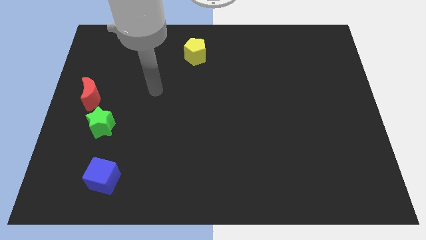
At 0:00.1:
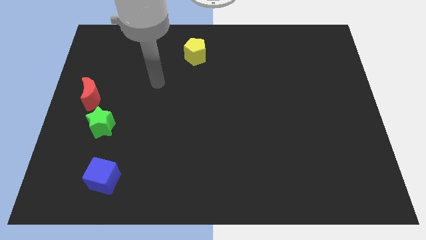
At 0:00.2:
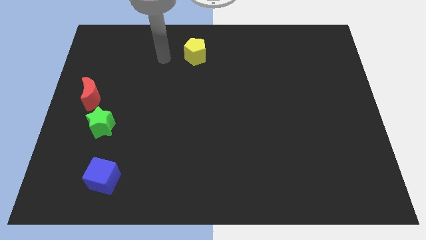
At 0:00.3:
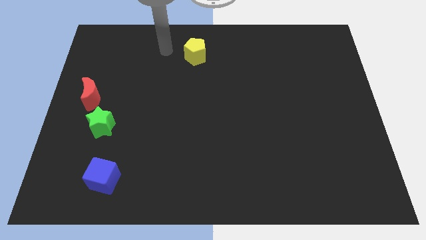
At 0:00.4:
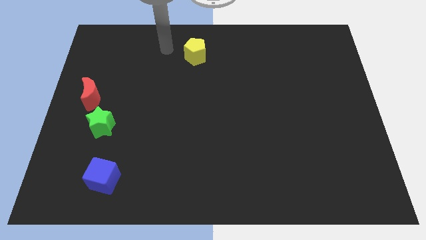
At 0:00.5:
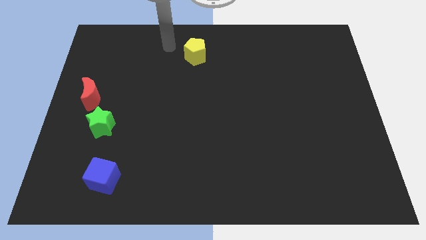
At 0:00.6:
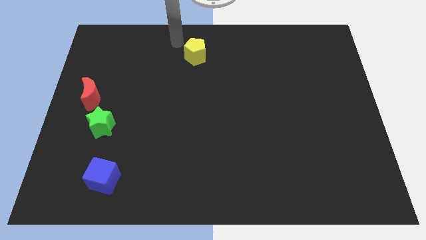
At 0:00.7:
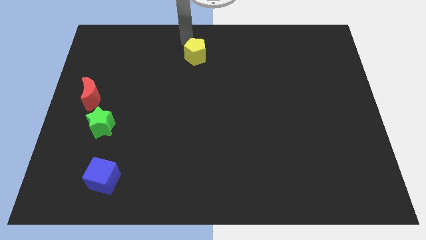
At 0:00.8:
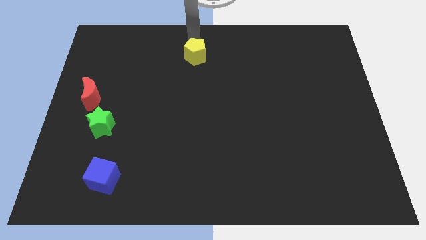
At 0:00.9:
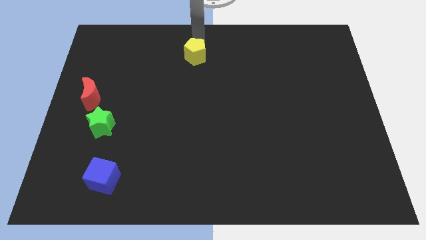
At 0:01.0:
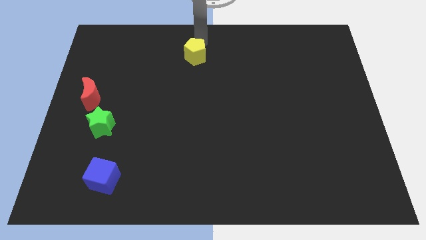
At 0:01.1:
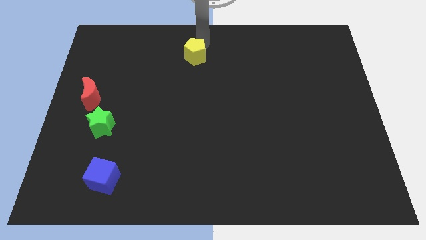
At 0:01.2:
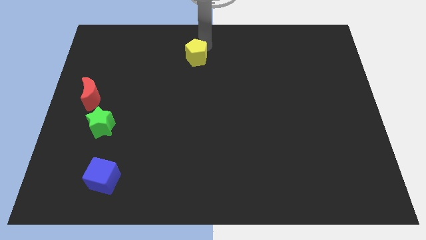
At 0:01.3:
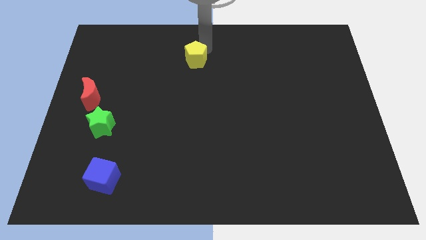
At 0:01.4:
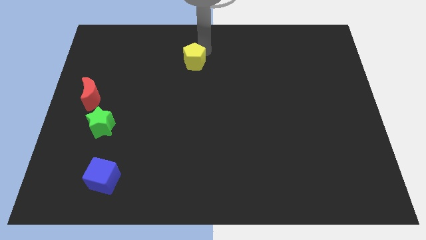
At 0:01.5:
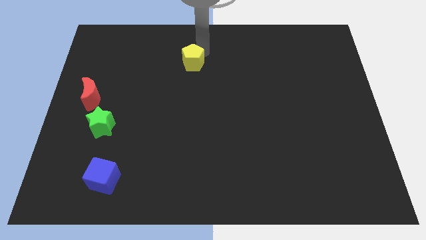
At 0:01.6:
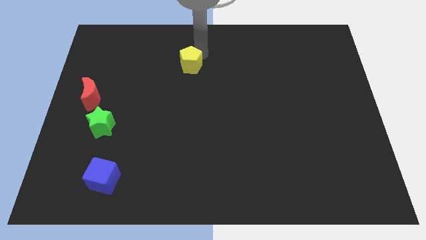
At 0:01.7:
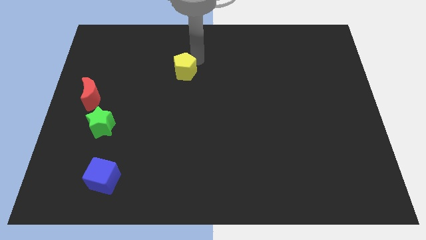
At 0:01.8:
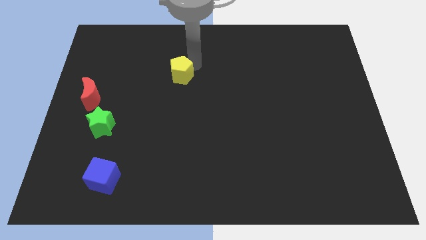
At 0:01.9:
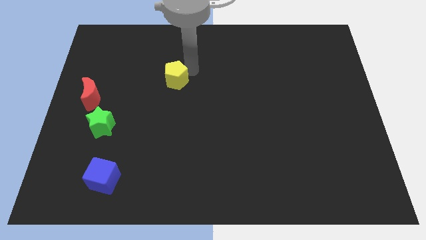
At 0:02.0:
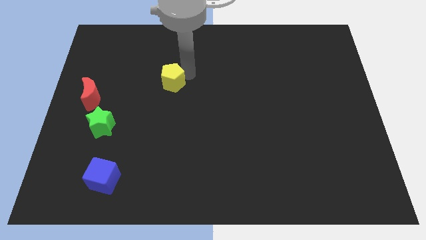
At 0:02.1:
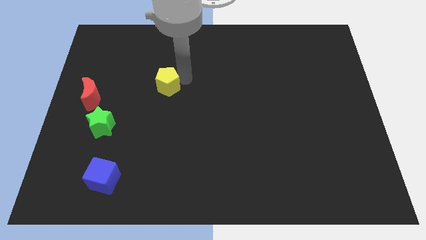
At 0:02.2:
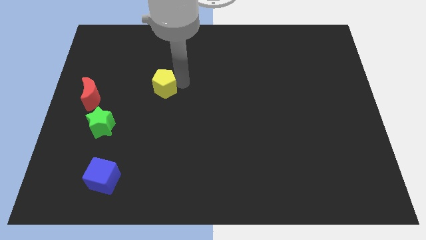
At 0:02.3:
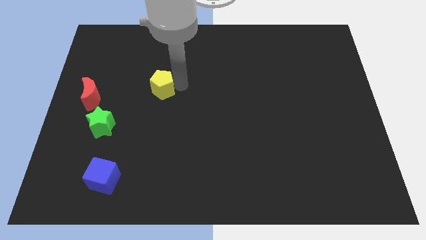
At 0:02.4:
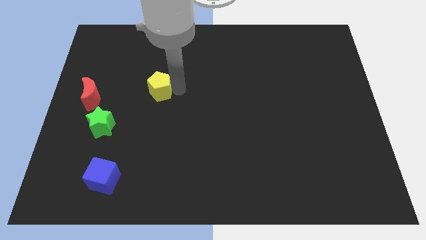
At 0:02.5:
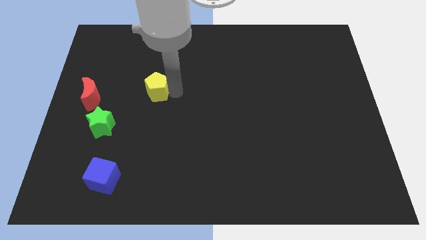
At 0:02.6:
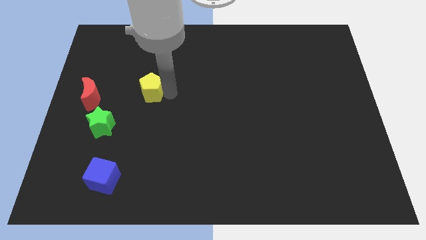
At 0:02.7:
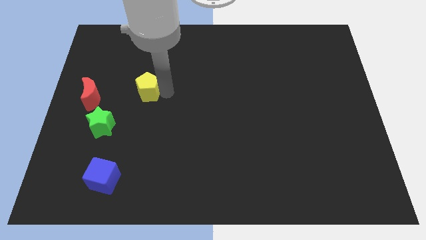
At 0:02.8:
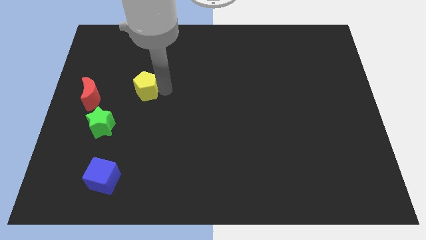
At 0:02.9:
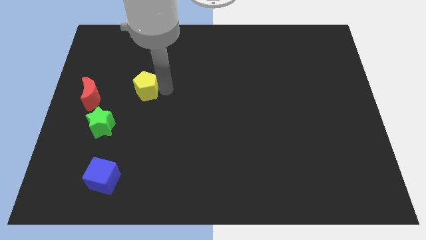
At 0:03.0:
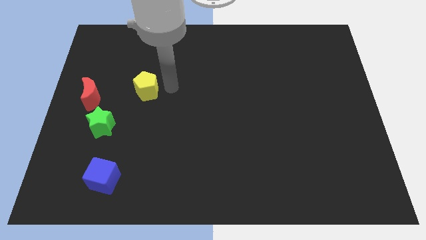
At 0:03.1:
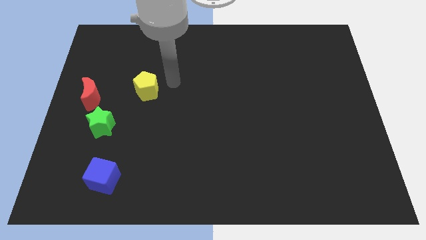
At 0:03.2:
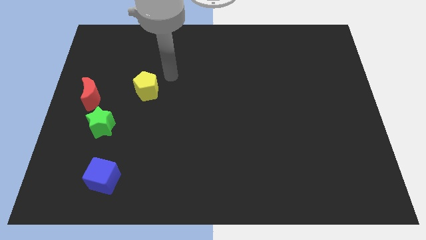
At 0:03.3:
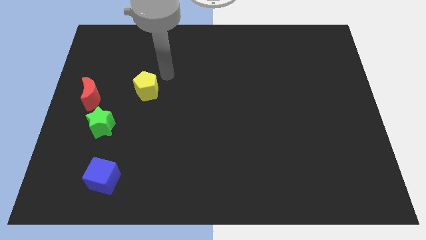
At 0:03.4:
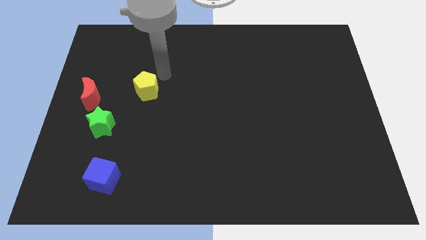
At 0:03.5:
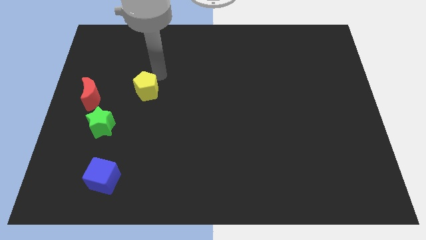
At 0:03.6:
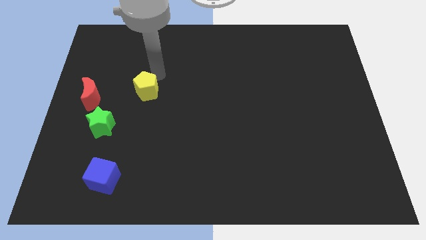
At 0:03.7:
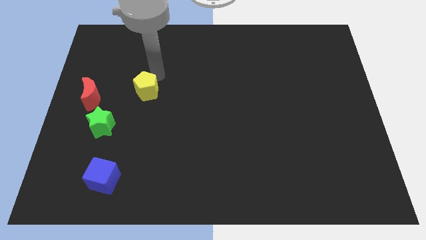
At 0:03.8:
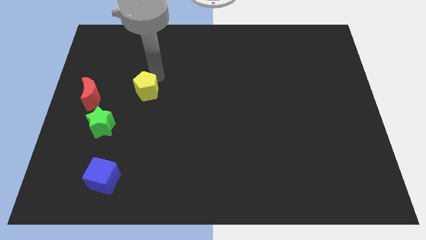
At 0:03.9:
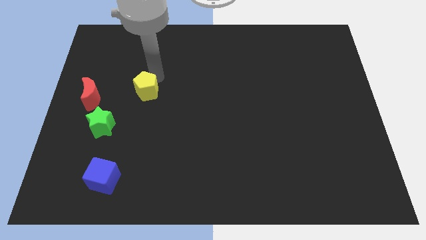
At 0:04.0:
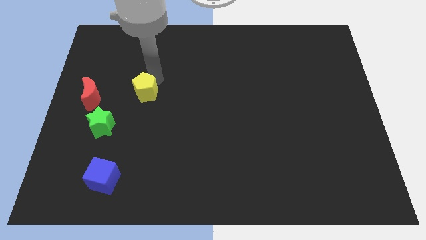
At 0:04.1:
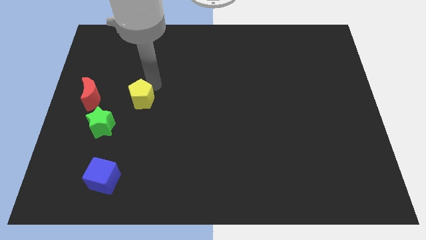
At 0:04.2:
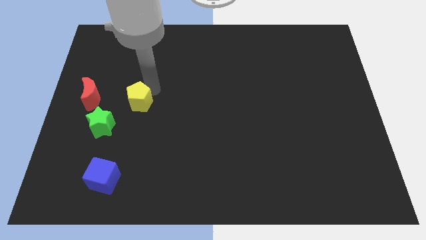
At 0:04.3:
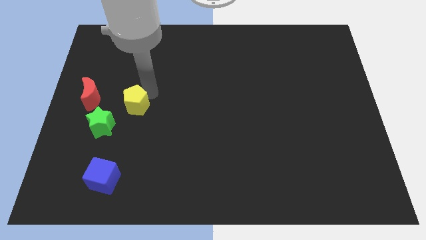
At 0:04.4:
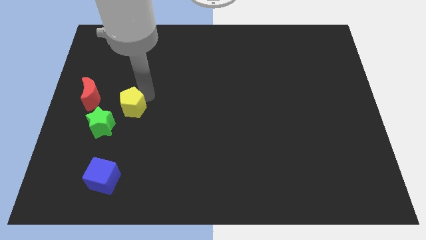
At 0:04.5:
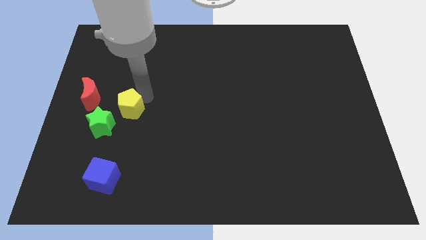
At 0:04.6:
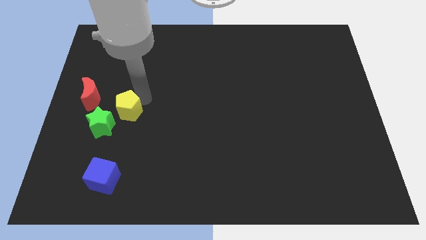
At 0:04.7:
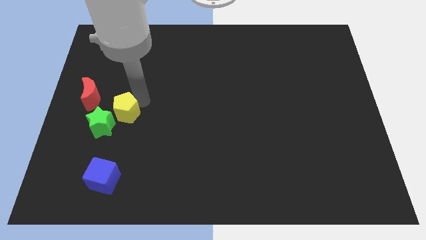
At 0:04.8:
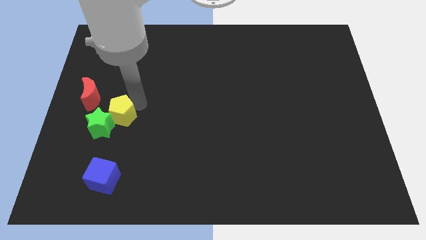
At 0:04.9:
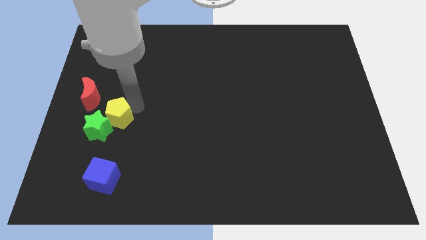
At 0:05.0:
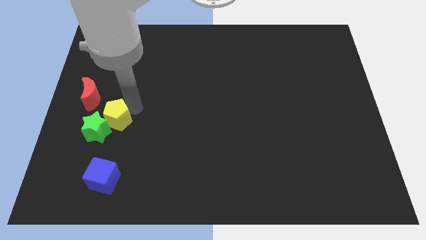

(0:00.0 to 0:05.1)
push the pentagon towards the green star

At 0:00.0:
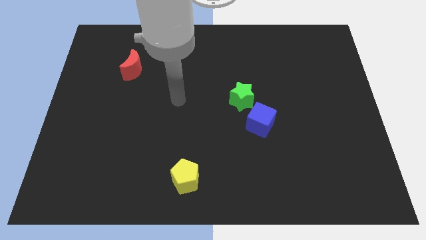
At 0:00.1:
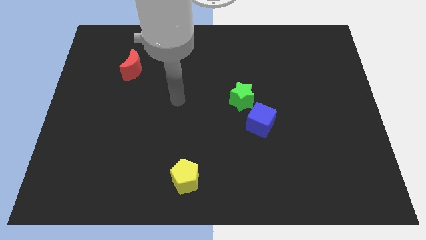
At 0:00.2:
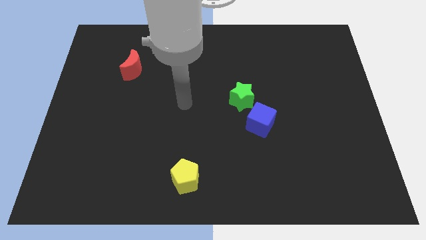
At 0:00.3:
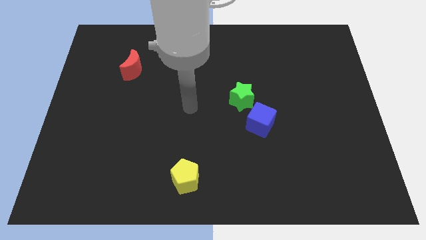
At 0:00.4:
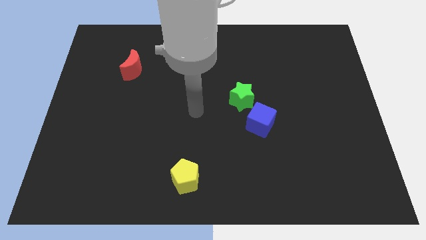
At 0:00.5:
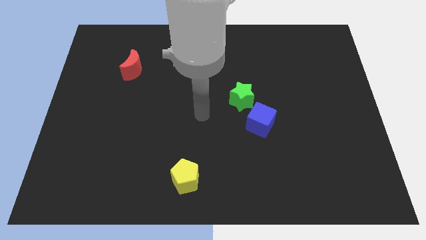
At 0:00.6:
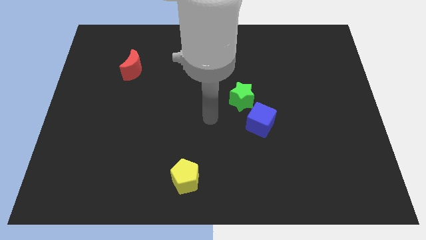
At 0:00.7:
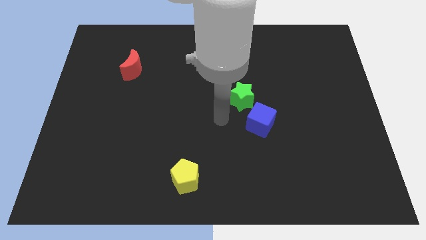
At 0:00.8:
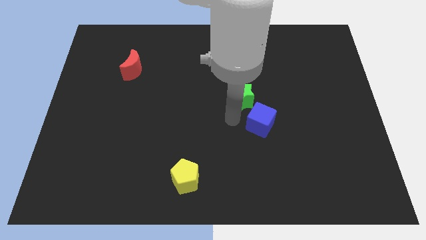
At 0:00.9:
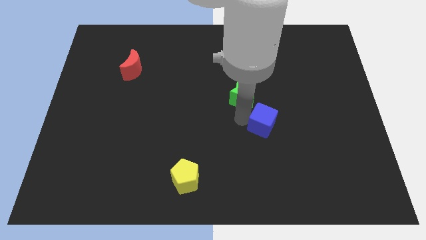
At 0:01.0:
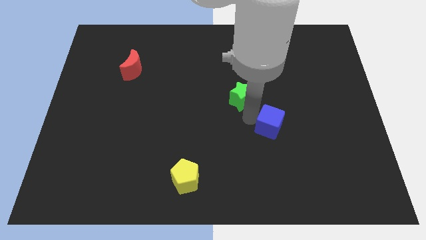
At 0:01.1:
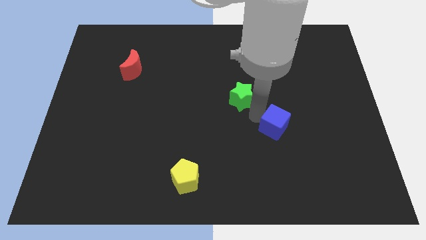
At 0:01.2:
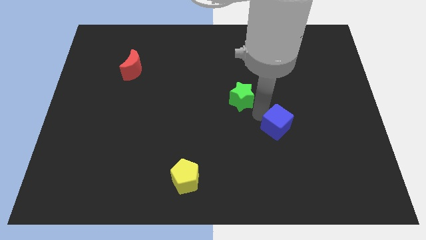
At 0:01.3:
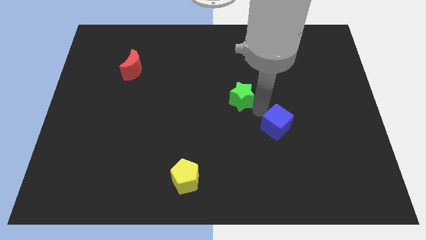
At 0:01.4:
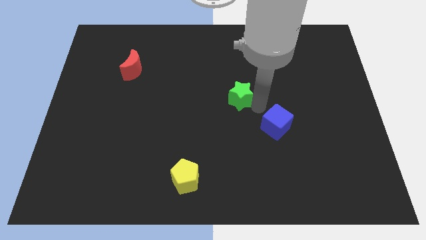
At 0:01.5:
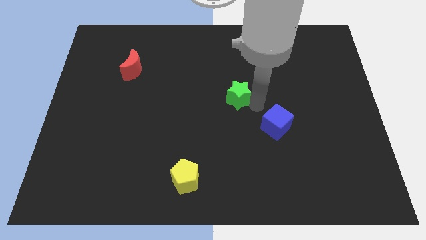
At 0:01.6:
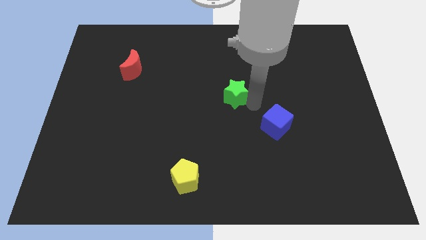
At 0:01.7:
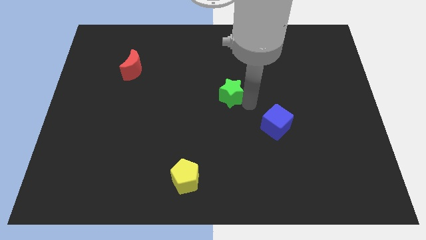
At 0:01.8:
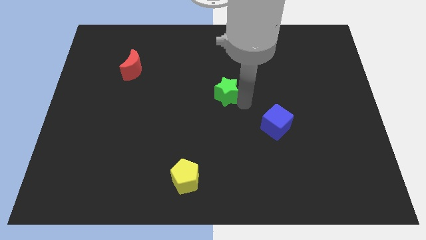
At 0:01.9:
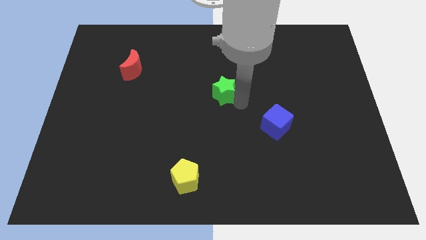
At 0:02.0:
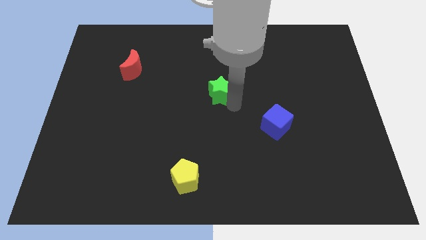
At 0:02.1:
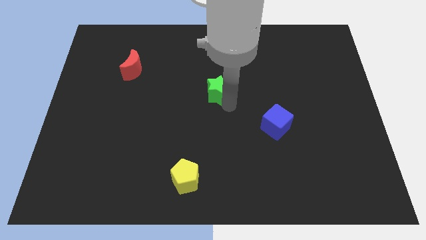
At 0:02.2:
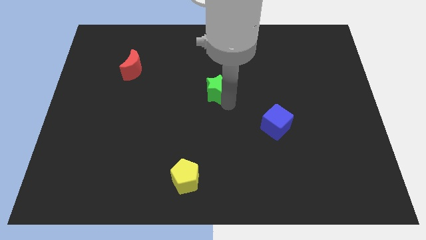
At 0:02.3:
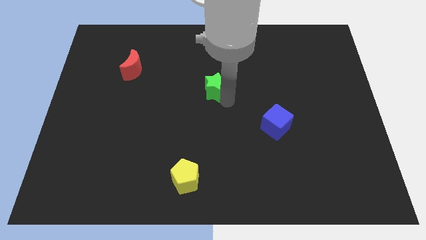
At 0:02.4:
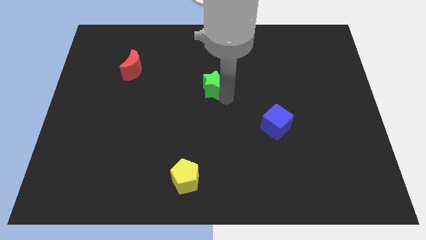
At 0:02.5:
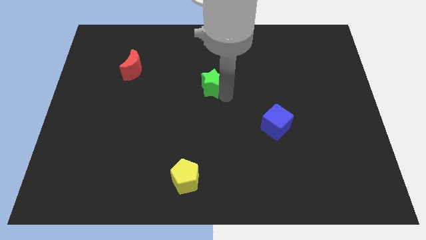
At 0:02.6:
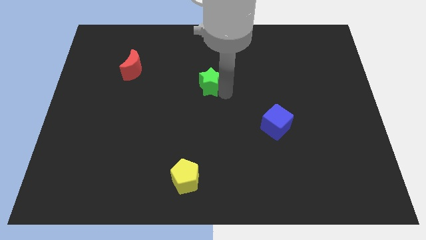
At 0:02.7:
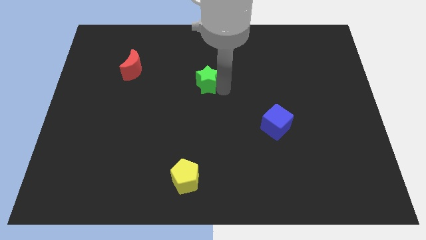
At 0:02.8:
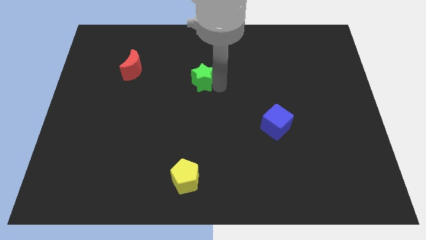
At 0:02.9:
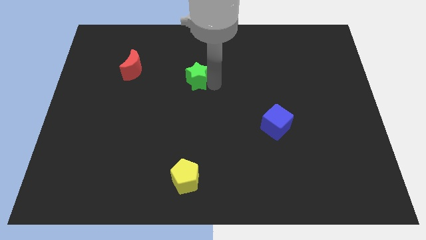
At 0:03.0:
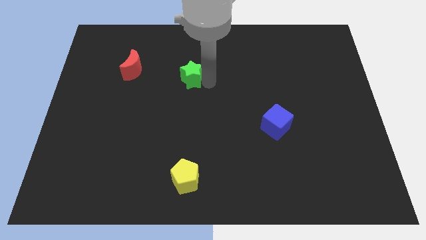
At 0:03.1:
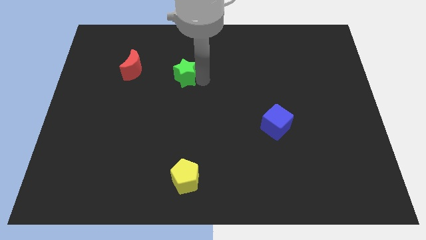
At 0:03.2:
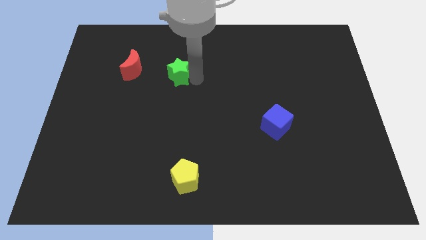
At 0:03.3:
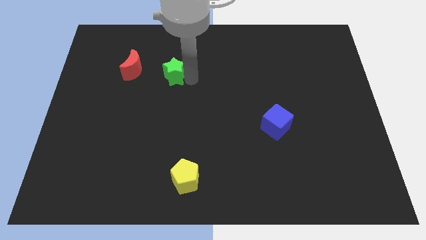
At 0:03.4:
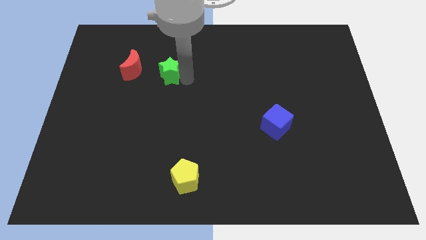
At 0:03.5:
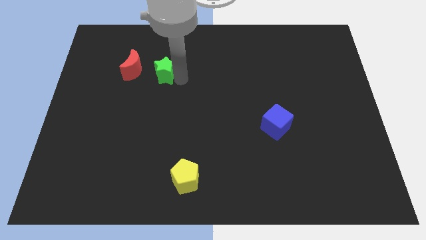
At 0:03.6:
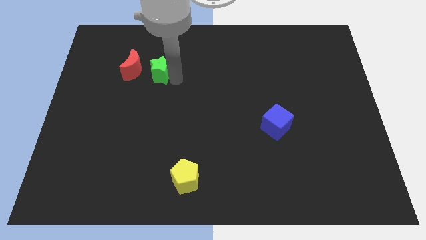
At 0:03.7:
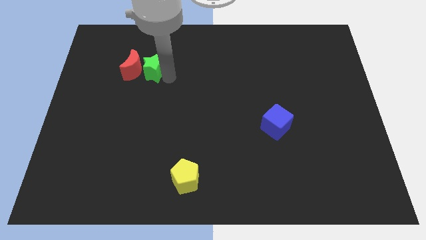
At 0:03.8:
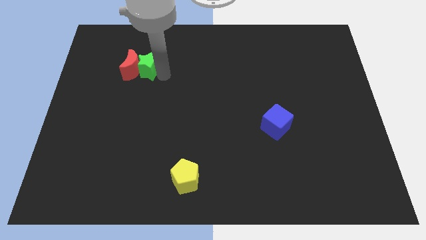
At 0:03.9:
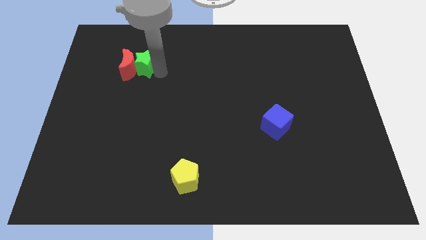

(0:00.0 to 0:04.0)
put the green star towards the red moon
